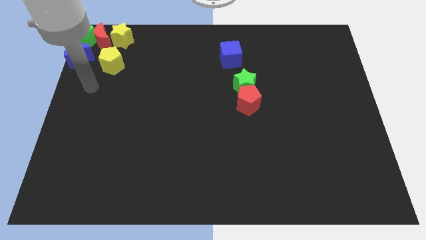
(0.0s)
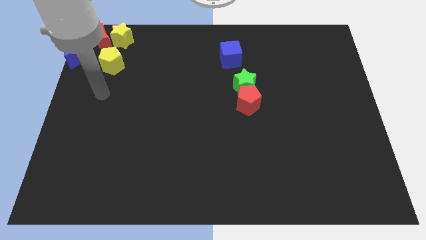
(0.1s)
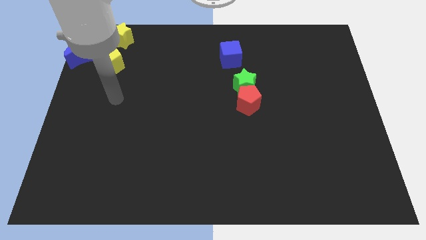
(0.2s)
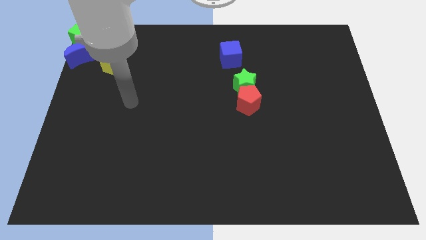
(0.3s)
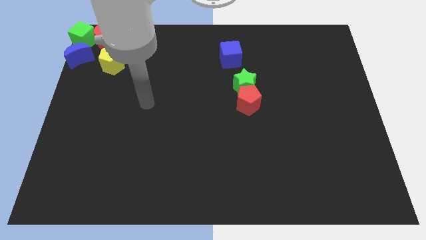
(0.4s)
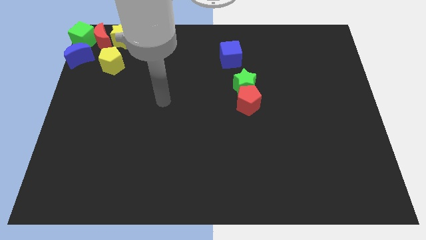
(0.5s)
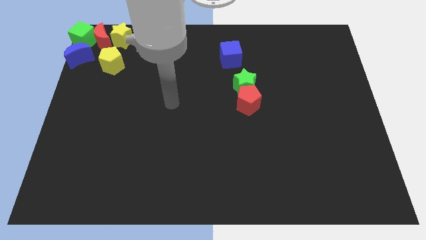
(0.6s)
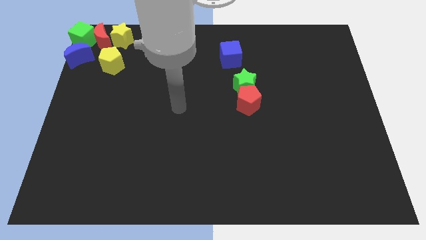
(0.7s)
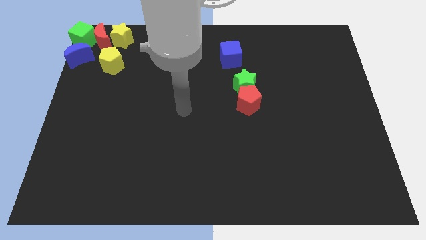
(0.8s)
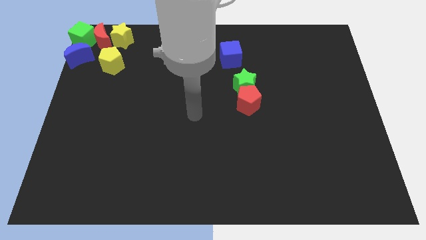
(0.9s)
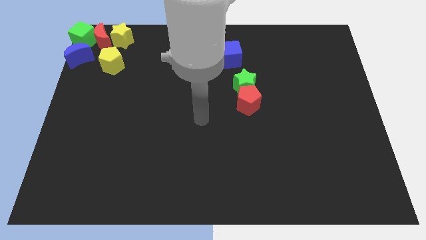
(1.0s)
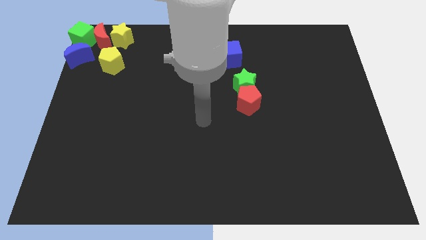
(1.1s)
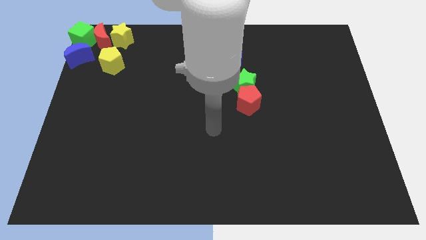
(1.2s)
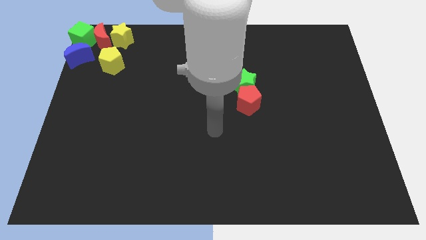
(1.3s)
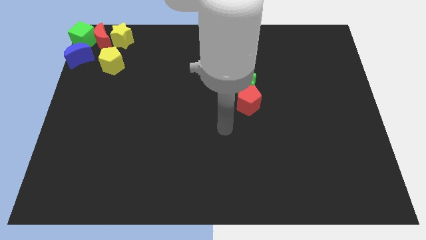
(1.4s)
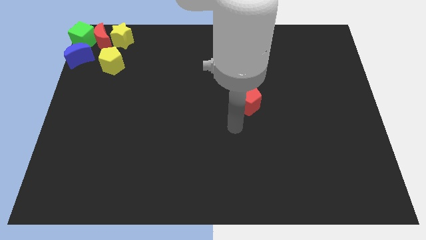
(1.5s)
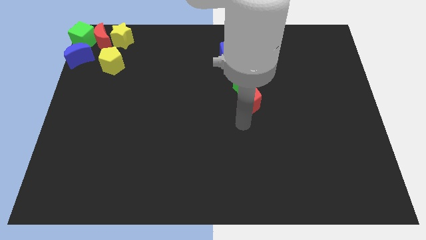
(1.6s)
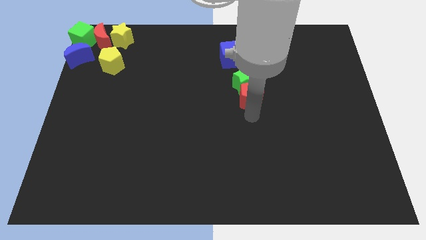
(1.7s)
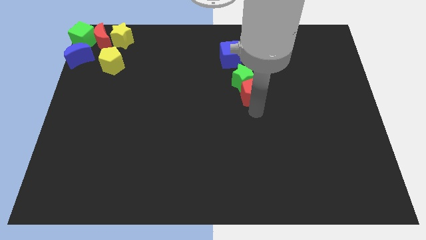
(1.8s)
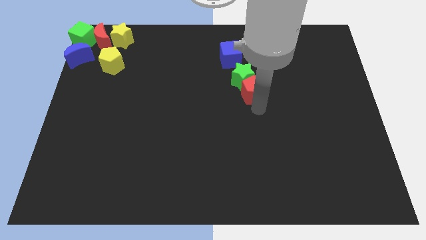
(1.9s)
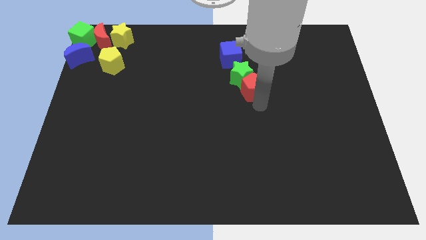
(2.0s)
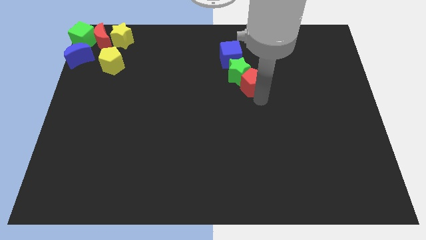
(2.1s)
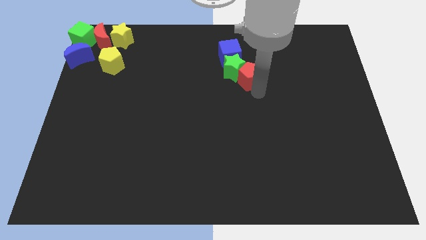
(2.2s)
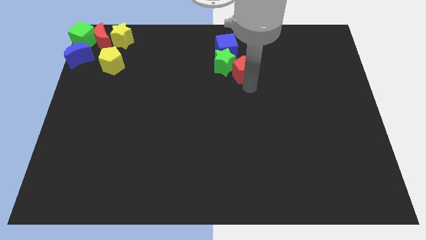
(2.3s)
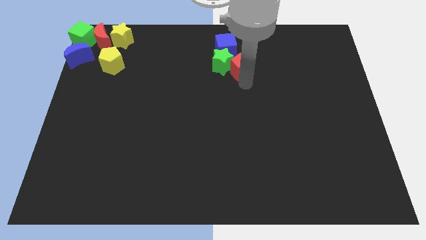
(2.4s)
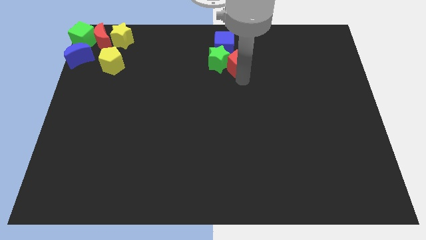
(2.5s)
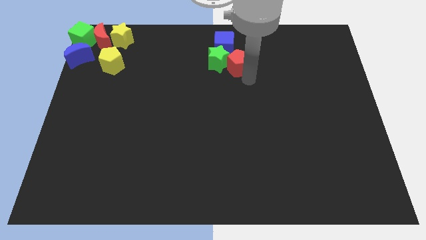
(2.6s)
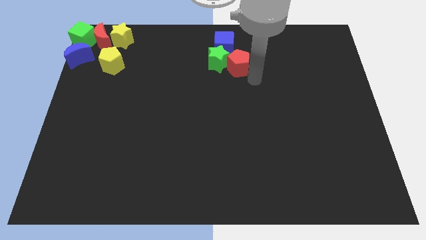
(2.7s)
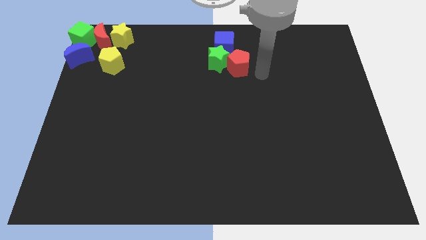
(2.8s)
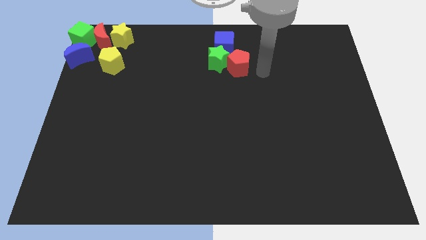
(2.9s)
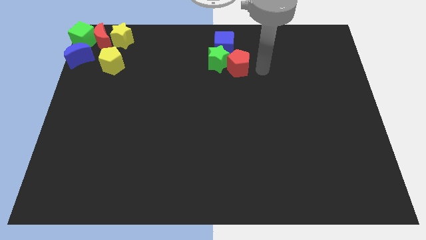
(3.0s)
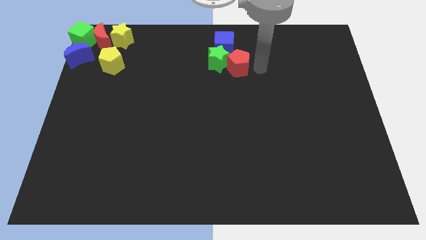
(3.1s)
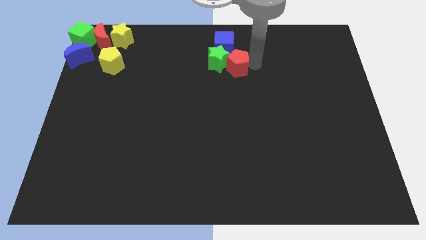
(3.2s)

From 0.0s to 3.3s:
push the green star and red pentagon together into blue cube

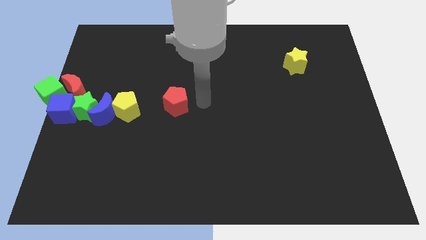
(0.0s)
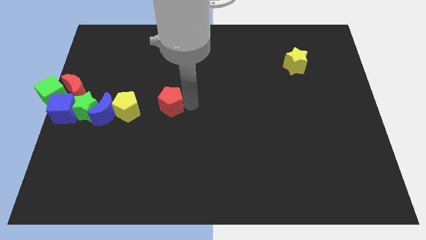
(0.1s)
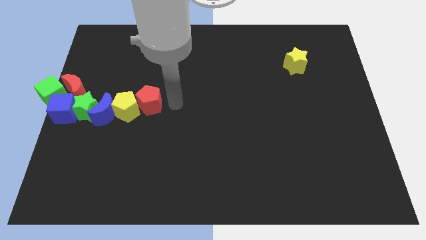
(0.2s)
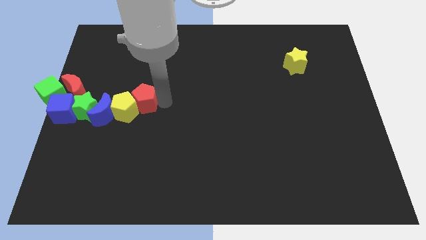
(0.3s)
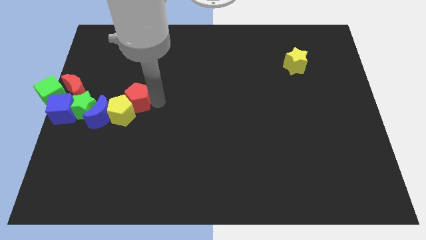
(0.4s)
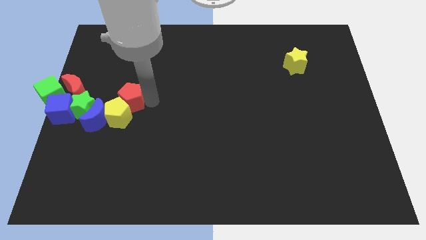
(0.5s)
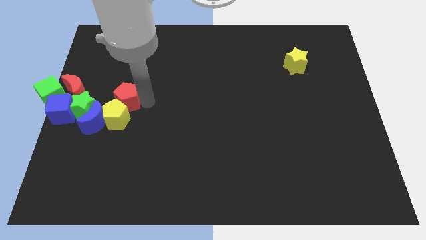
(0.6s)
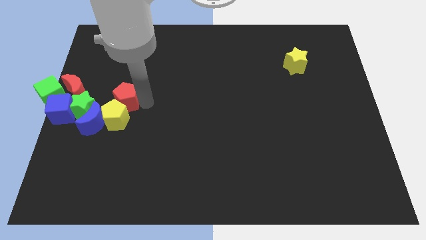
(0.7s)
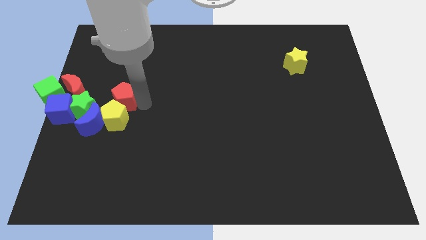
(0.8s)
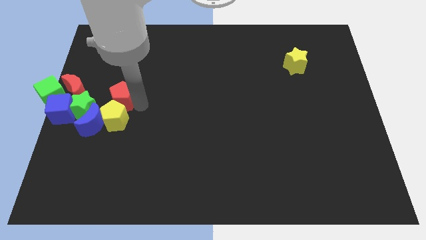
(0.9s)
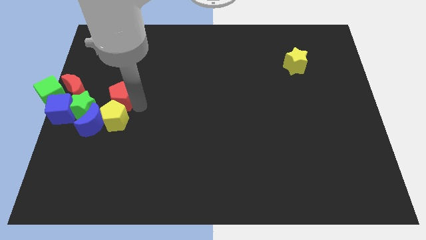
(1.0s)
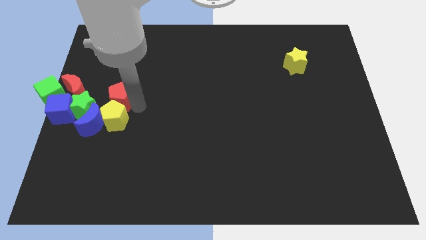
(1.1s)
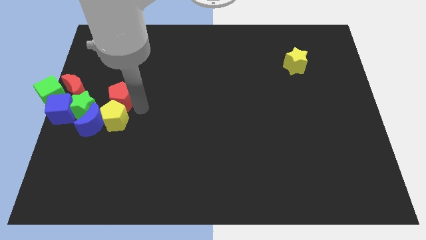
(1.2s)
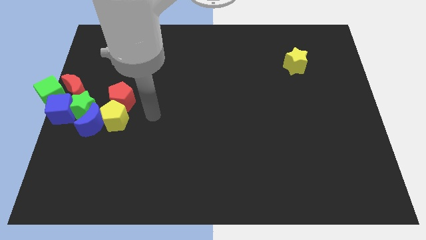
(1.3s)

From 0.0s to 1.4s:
place the red pentagon down to the yellow pentagon

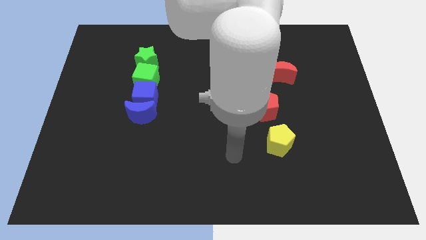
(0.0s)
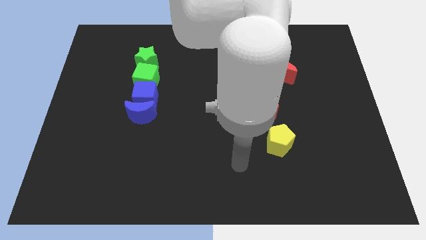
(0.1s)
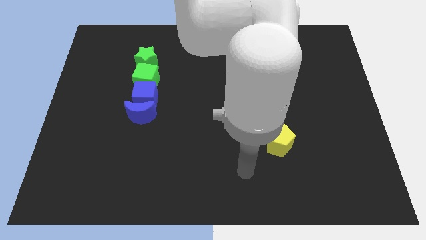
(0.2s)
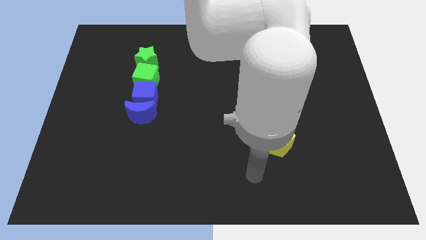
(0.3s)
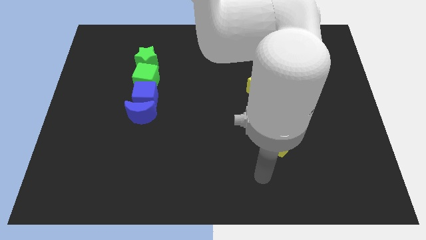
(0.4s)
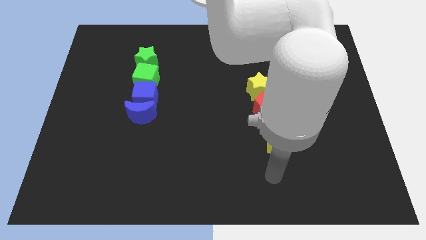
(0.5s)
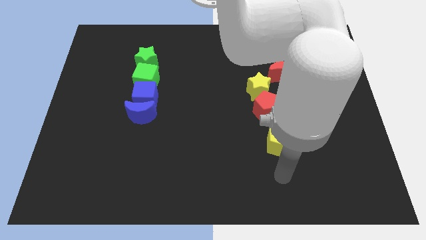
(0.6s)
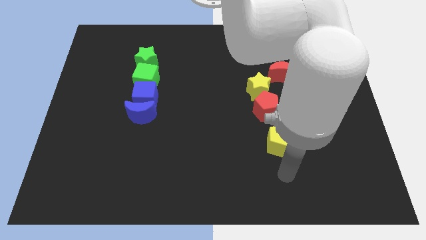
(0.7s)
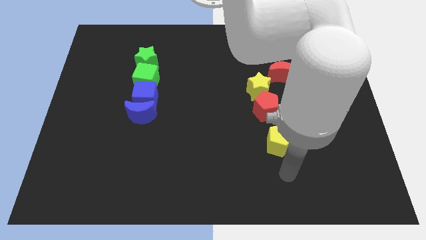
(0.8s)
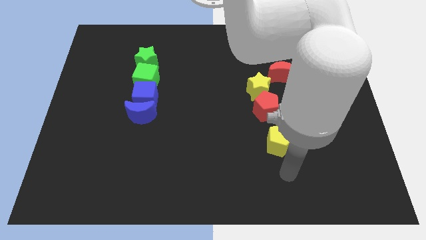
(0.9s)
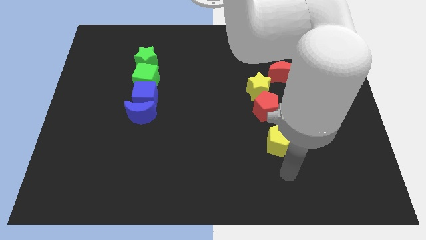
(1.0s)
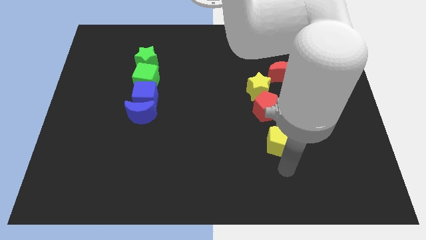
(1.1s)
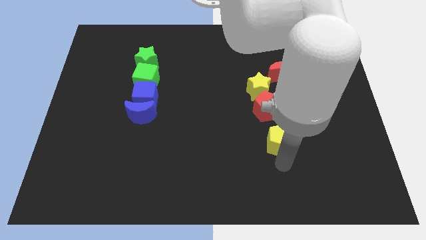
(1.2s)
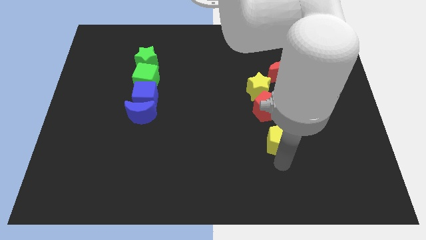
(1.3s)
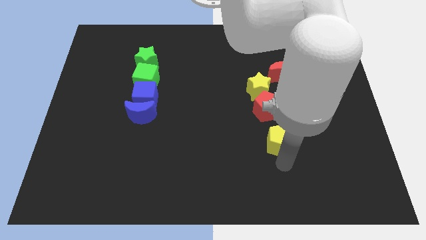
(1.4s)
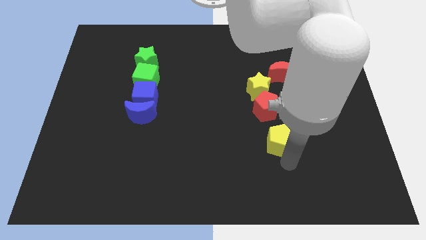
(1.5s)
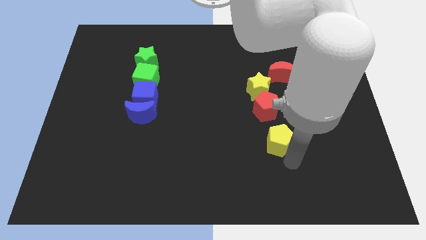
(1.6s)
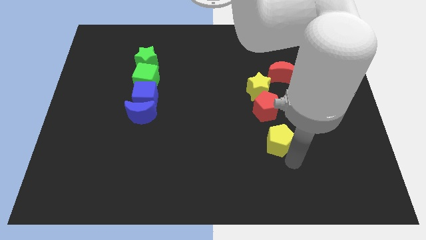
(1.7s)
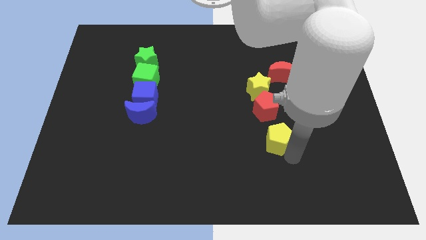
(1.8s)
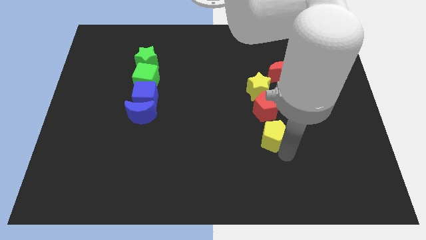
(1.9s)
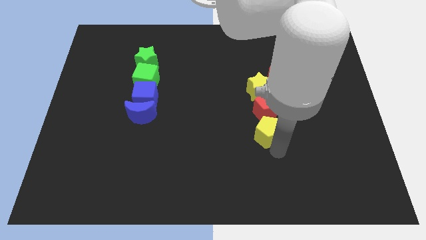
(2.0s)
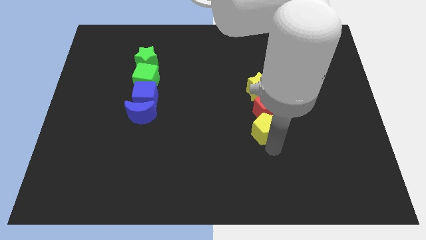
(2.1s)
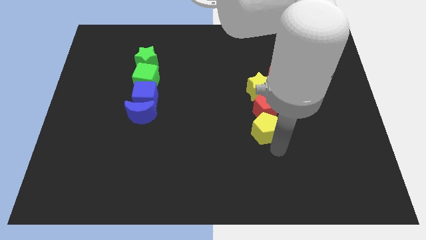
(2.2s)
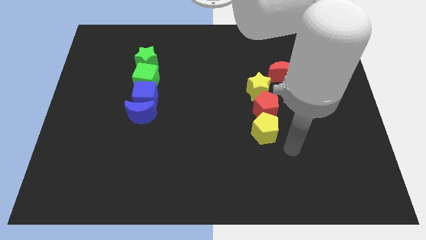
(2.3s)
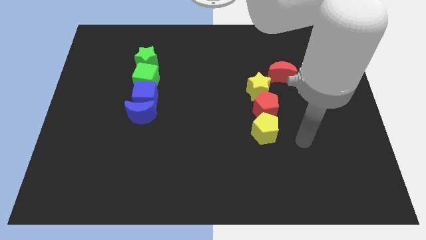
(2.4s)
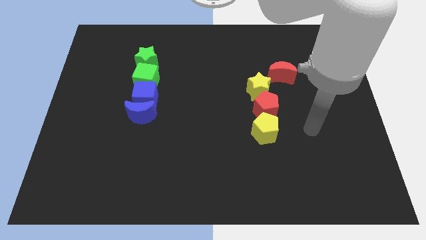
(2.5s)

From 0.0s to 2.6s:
put the yellow pentagon at the bottom of the red pentagon

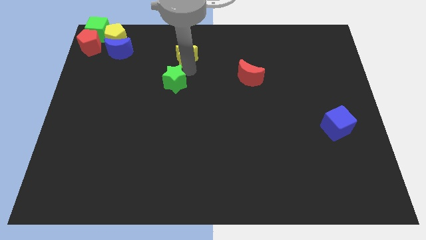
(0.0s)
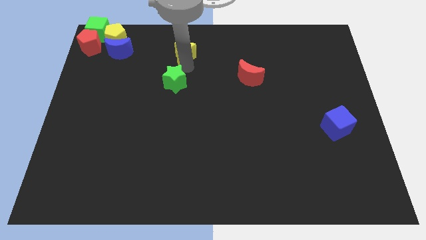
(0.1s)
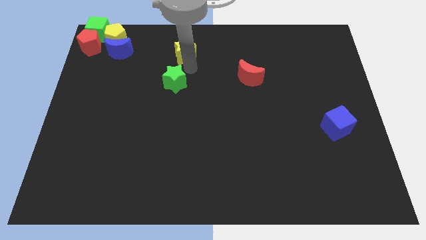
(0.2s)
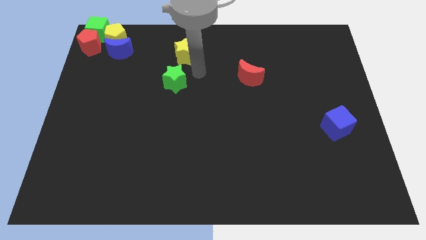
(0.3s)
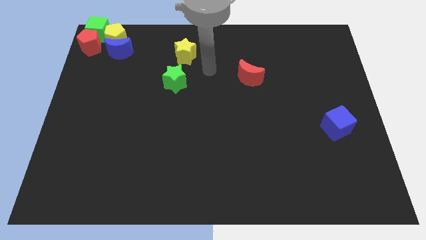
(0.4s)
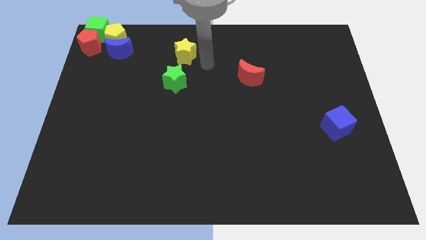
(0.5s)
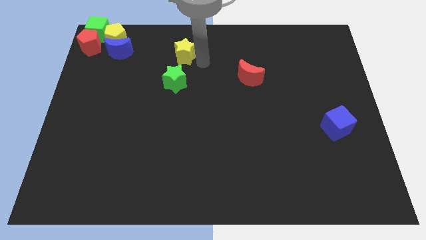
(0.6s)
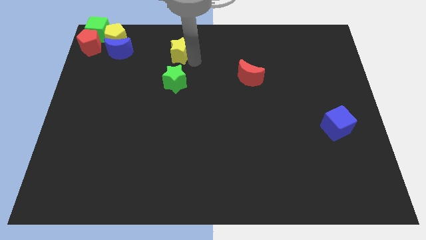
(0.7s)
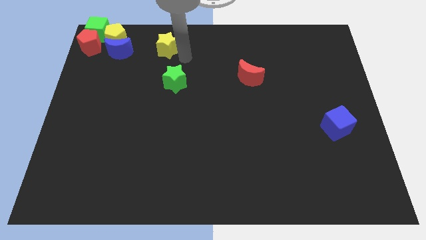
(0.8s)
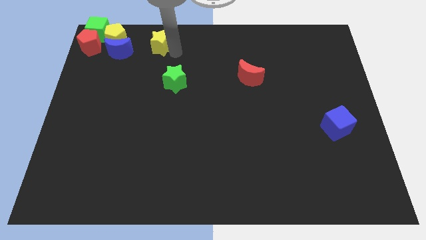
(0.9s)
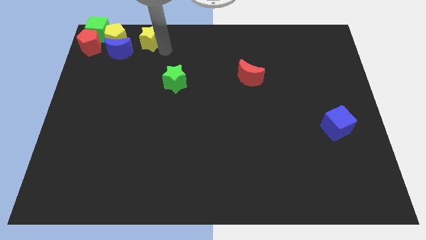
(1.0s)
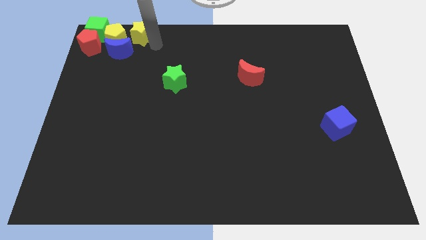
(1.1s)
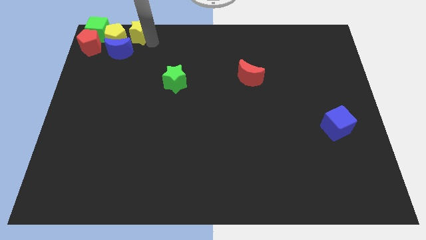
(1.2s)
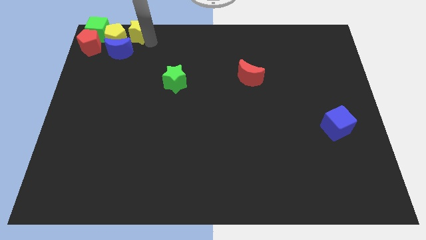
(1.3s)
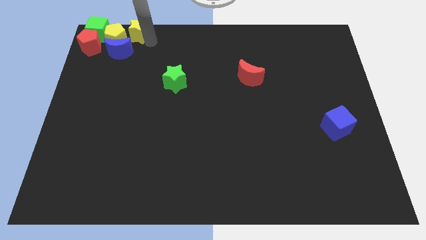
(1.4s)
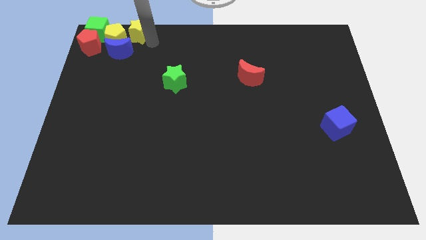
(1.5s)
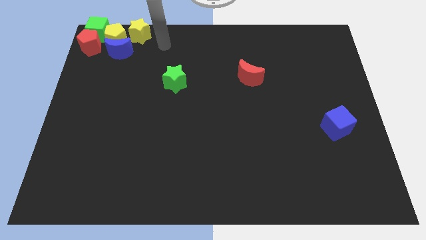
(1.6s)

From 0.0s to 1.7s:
move the yellow star to the right of the yellow pentagon
